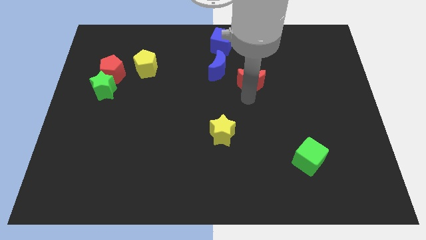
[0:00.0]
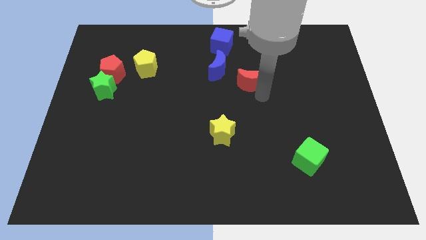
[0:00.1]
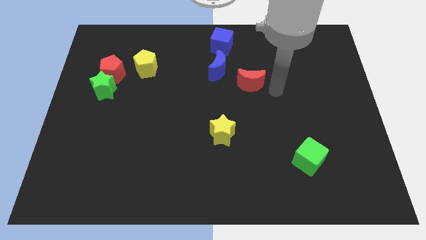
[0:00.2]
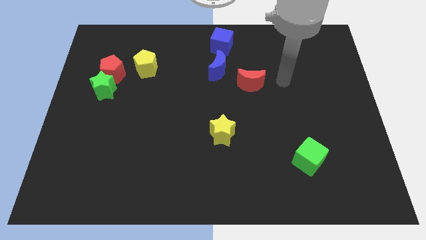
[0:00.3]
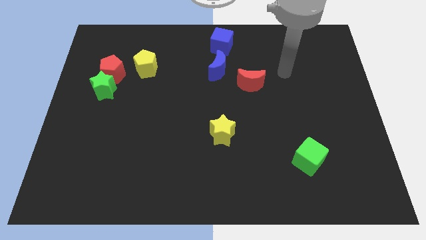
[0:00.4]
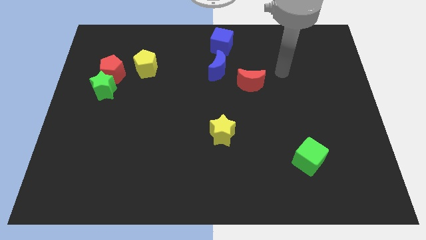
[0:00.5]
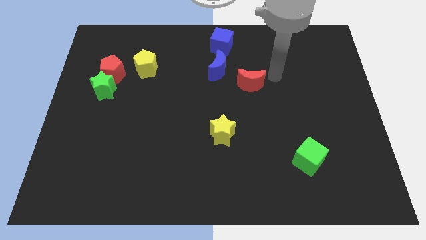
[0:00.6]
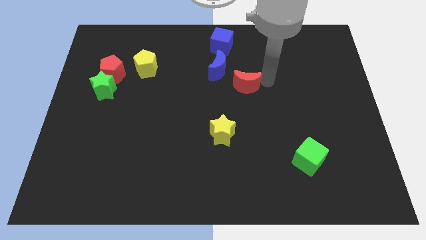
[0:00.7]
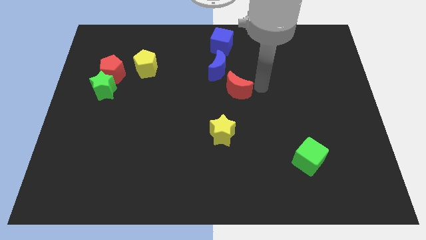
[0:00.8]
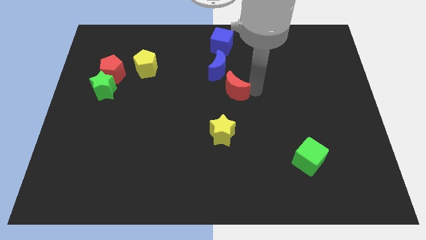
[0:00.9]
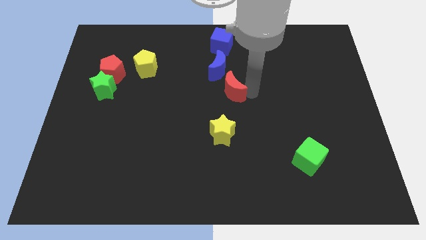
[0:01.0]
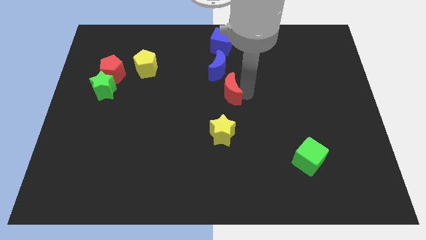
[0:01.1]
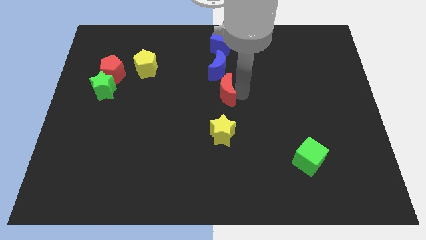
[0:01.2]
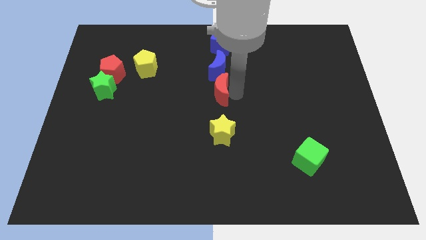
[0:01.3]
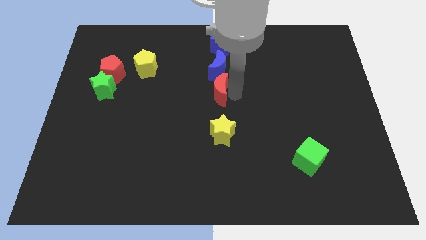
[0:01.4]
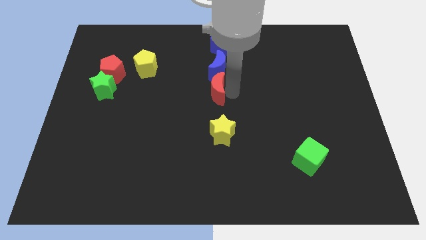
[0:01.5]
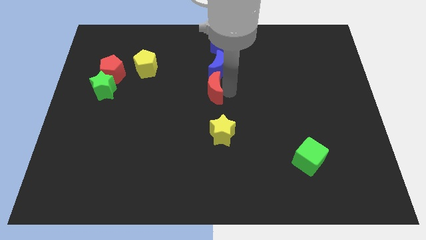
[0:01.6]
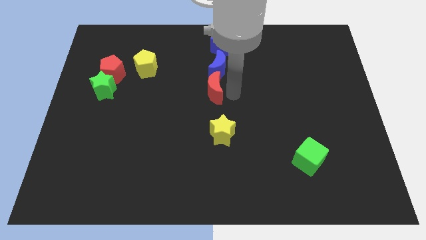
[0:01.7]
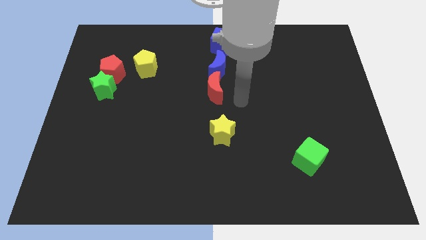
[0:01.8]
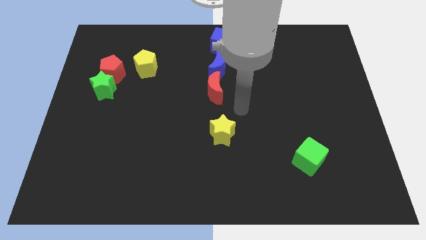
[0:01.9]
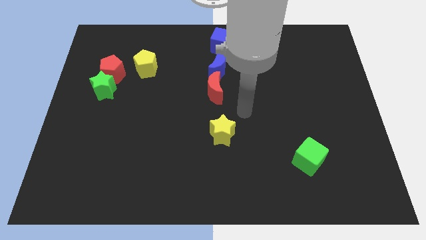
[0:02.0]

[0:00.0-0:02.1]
push red crescent below blue crescent

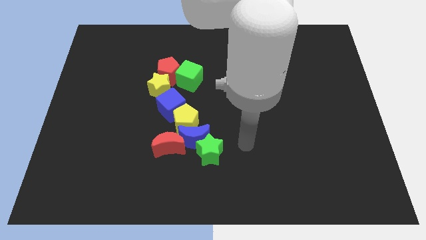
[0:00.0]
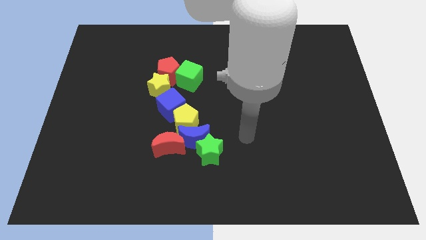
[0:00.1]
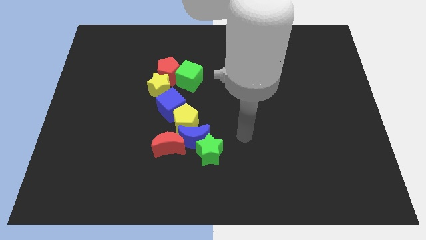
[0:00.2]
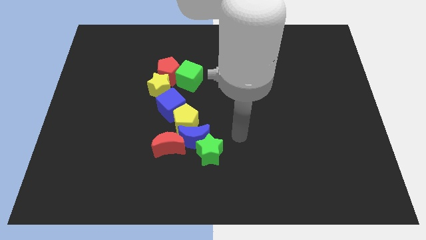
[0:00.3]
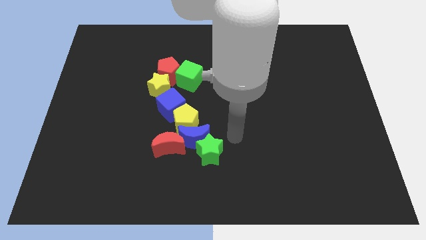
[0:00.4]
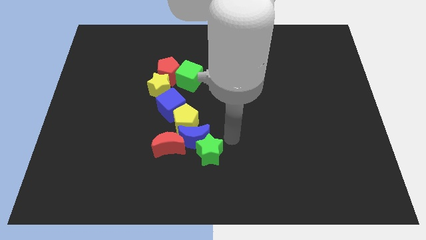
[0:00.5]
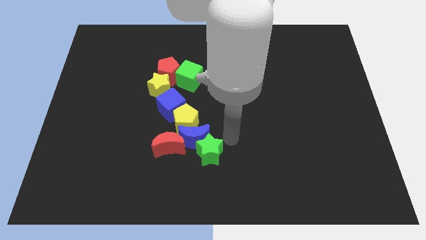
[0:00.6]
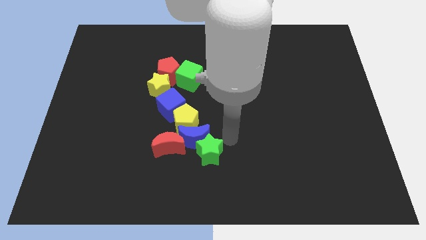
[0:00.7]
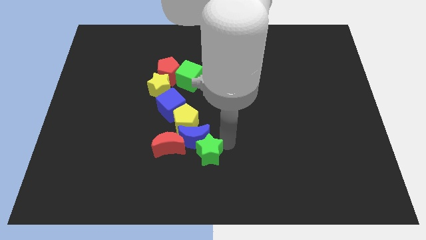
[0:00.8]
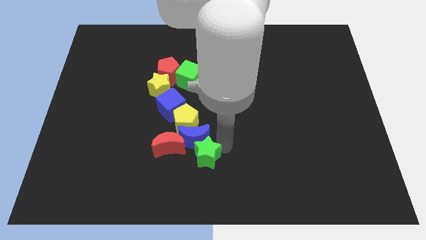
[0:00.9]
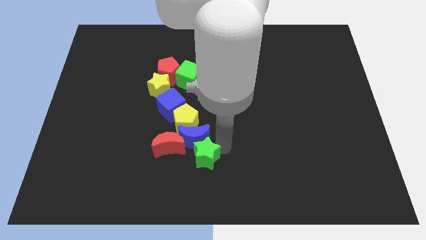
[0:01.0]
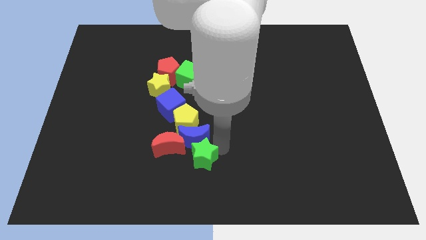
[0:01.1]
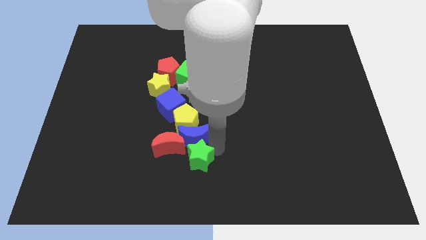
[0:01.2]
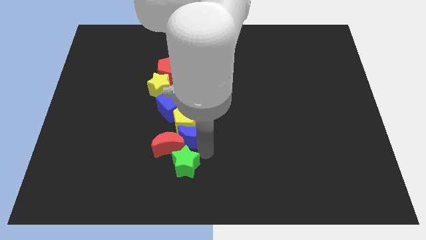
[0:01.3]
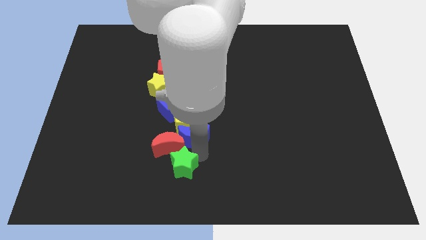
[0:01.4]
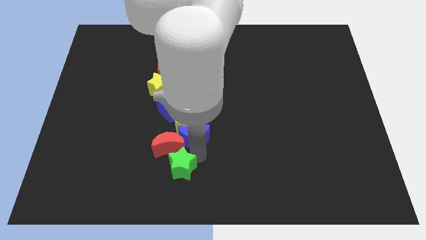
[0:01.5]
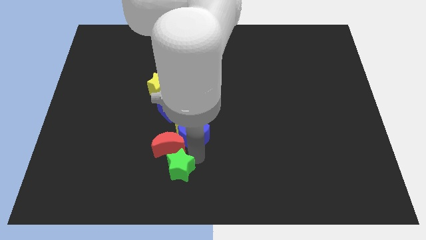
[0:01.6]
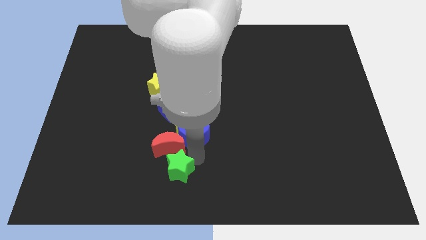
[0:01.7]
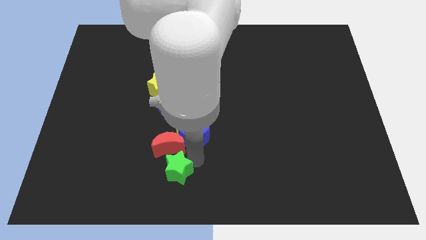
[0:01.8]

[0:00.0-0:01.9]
place the green star below the red crescent

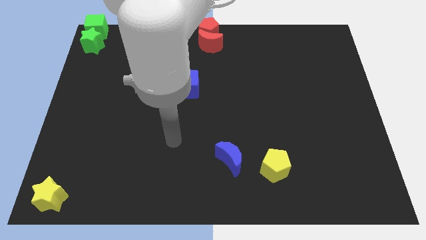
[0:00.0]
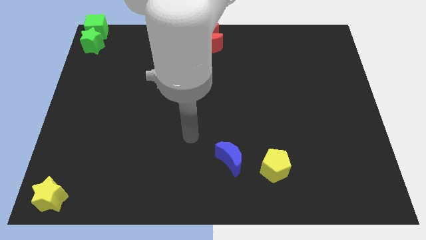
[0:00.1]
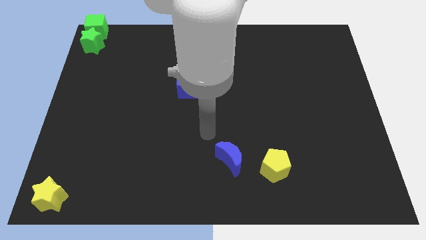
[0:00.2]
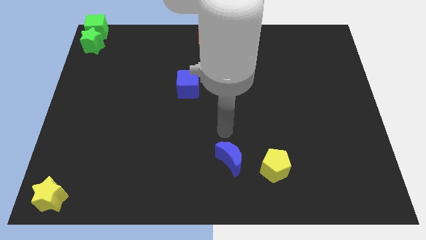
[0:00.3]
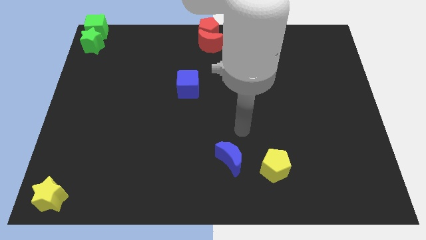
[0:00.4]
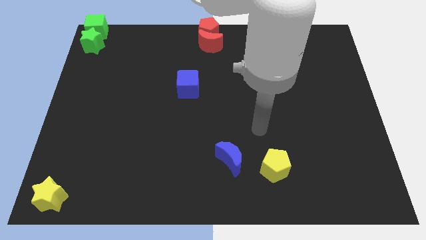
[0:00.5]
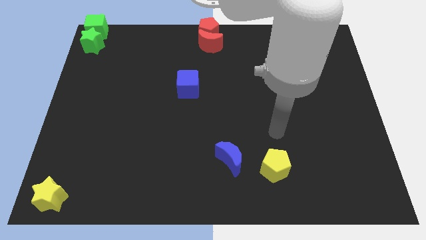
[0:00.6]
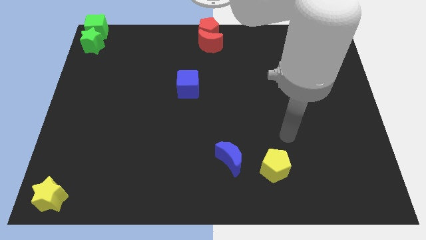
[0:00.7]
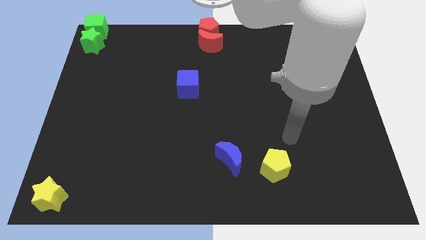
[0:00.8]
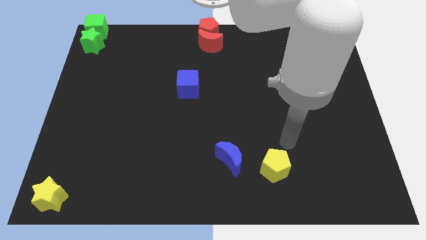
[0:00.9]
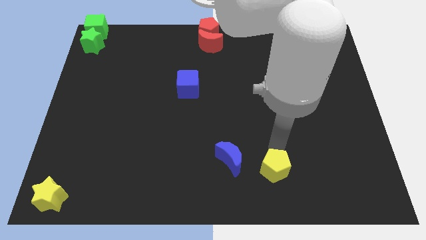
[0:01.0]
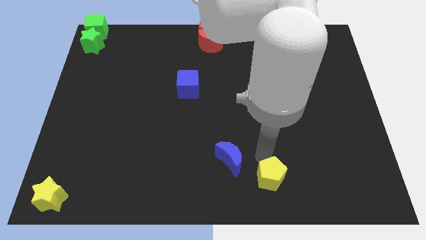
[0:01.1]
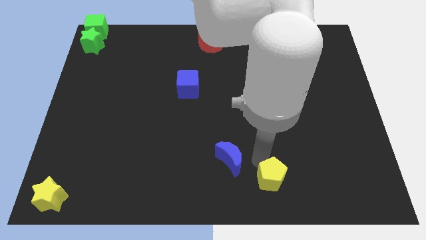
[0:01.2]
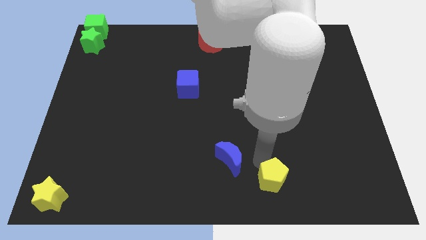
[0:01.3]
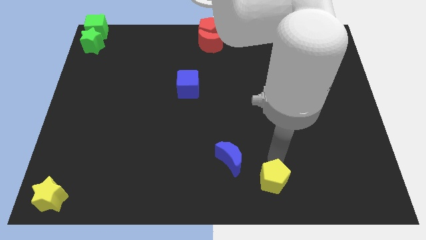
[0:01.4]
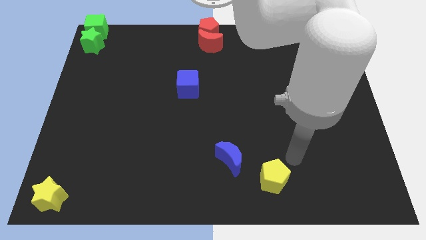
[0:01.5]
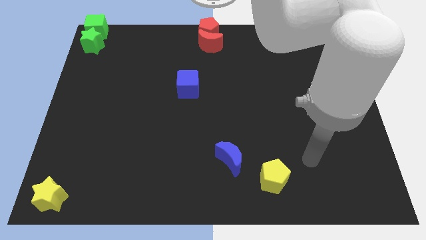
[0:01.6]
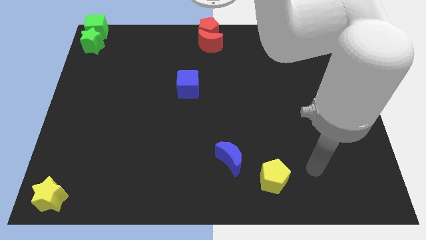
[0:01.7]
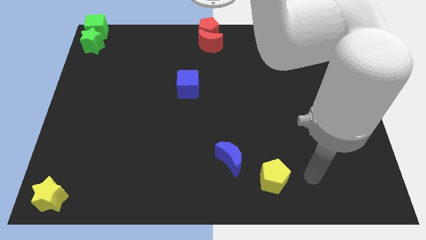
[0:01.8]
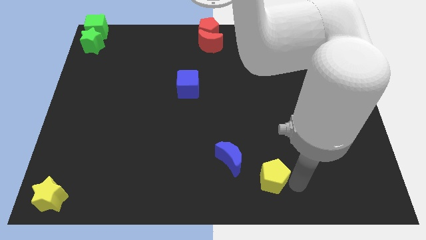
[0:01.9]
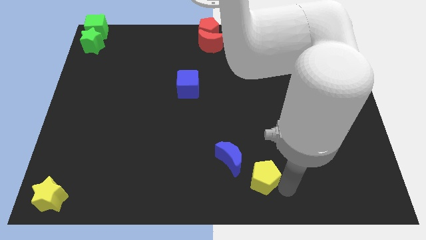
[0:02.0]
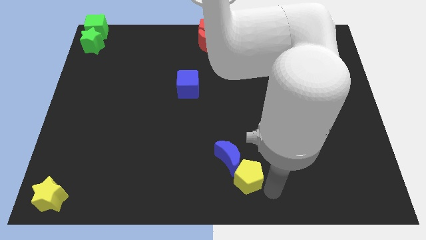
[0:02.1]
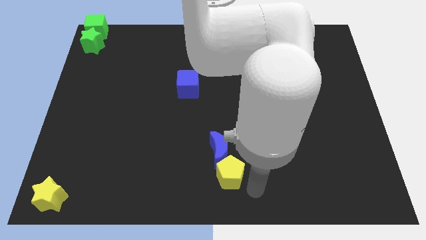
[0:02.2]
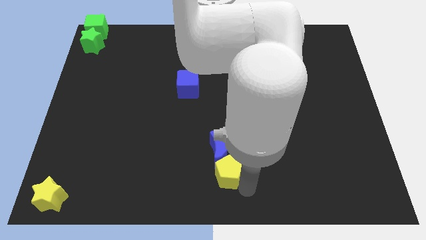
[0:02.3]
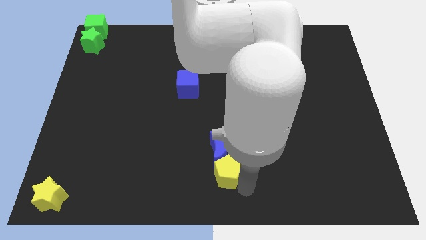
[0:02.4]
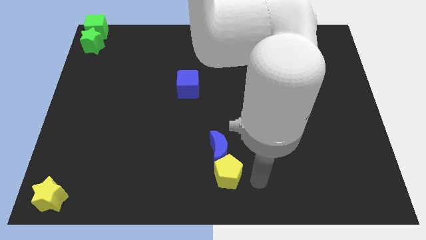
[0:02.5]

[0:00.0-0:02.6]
move the yellow pentagon into the blue crescent

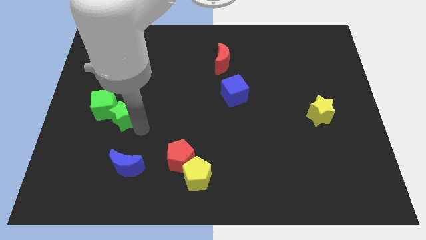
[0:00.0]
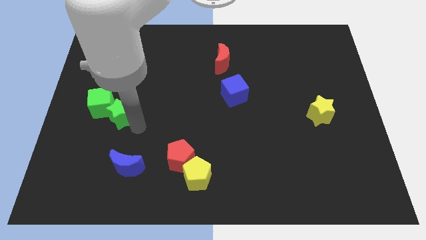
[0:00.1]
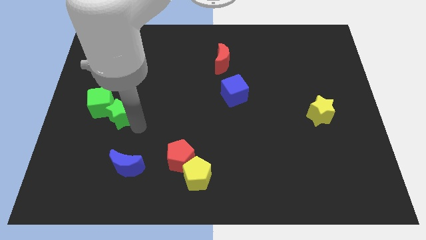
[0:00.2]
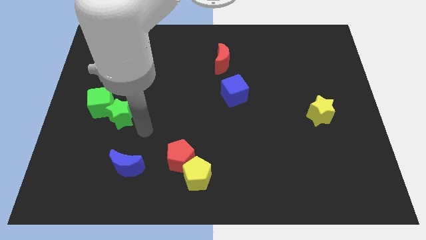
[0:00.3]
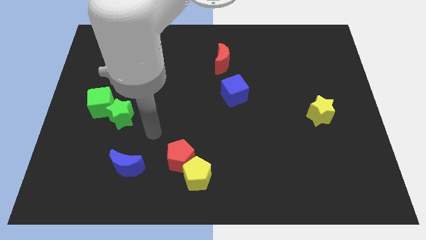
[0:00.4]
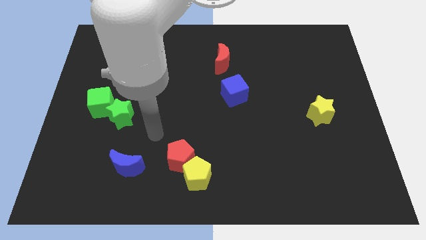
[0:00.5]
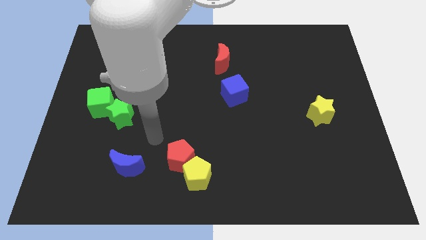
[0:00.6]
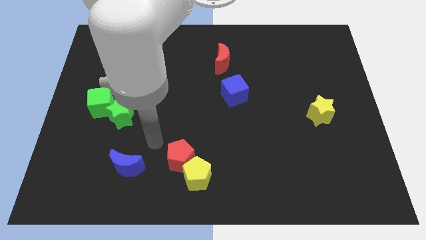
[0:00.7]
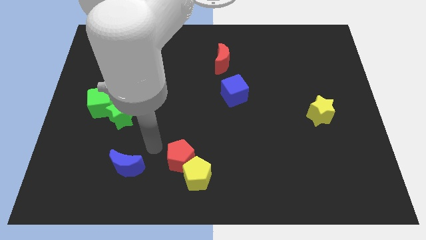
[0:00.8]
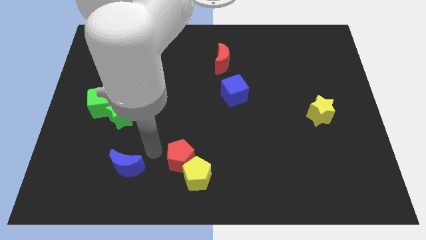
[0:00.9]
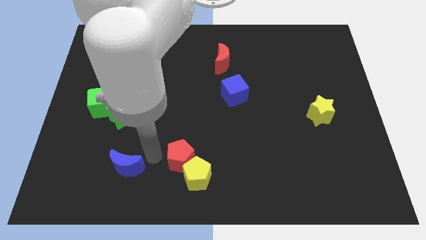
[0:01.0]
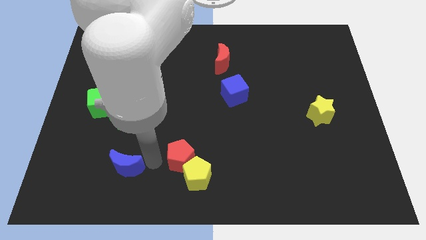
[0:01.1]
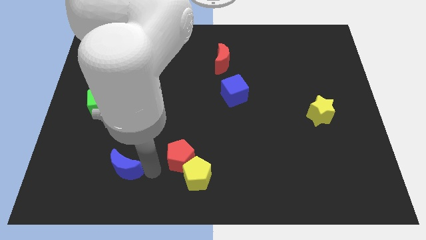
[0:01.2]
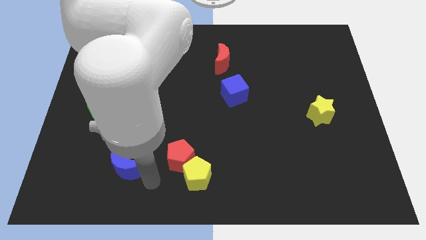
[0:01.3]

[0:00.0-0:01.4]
move your arm away from green star

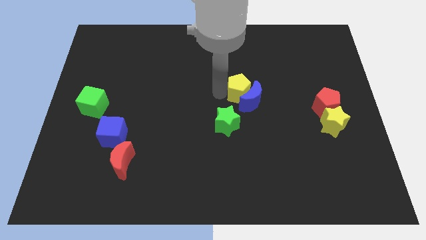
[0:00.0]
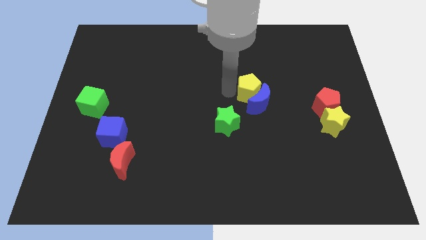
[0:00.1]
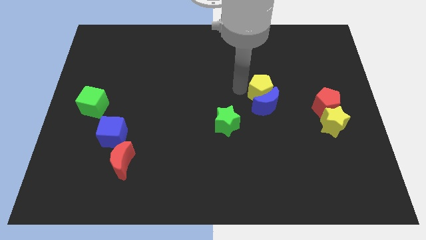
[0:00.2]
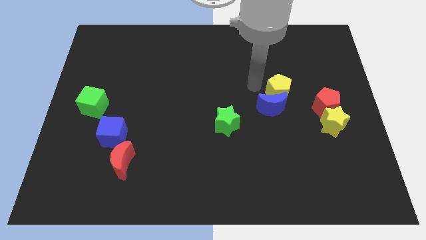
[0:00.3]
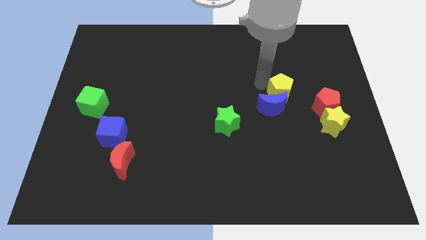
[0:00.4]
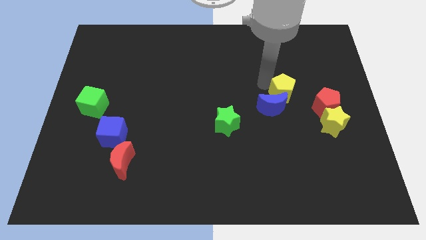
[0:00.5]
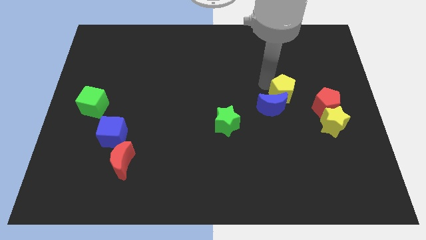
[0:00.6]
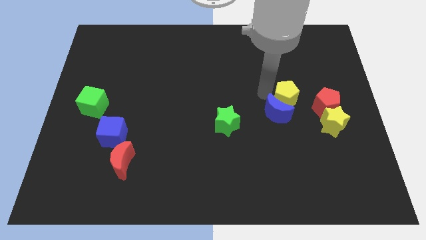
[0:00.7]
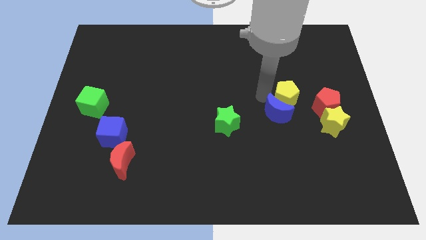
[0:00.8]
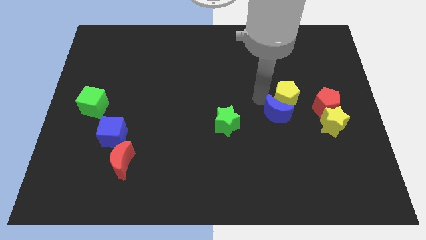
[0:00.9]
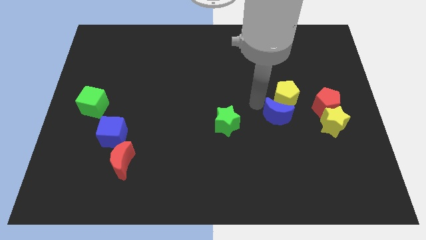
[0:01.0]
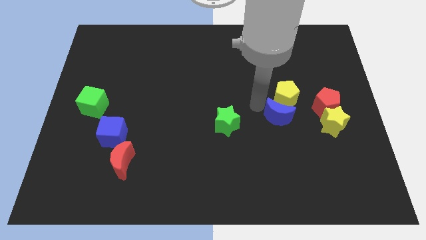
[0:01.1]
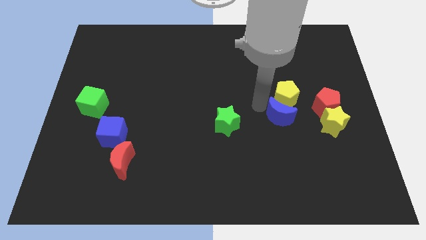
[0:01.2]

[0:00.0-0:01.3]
place the yellow pentagon to the left of the red pentagon
